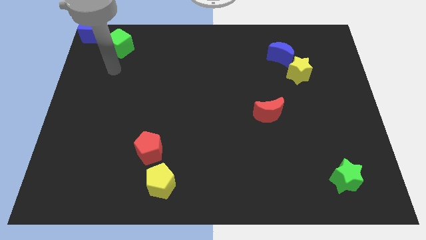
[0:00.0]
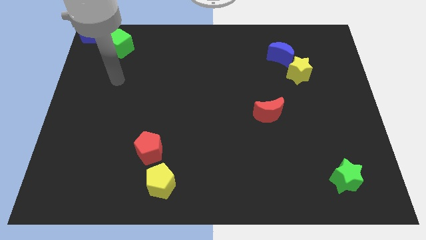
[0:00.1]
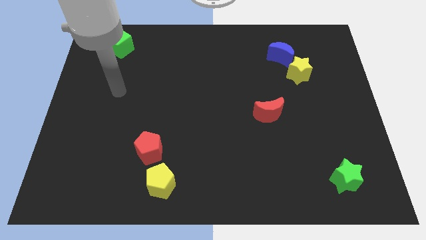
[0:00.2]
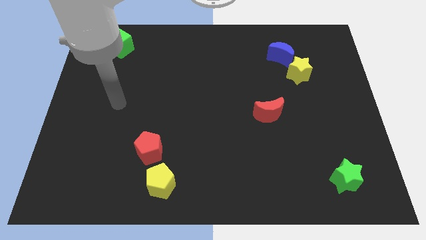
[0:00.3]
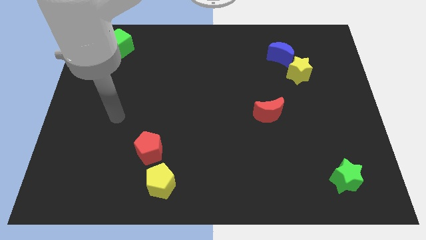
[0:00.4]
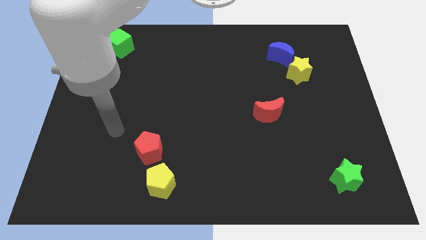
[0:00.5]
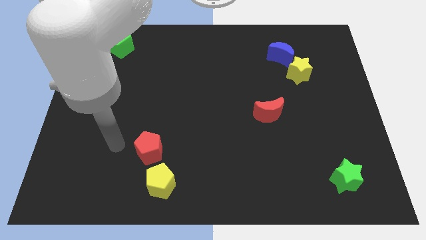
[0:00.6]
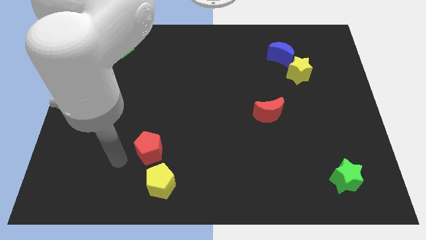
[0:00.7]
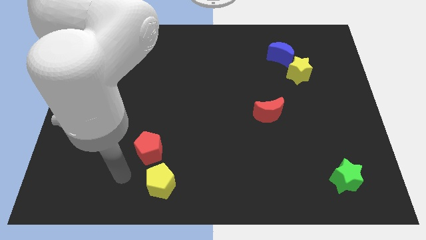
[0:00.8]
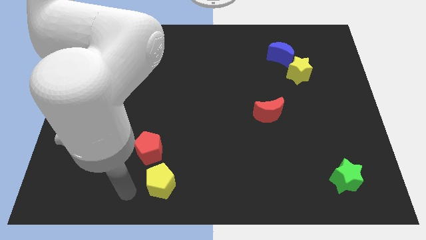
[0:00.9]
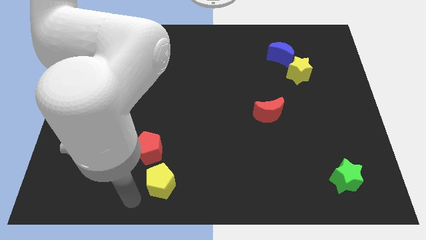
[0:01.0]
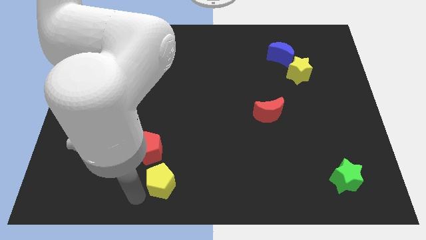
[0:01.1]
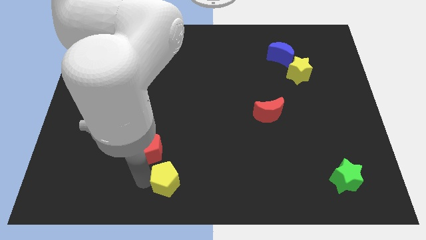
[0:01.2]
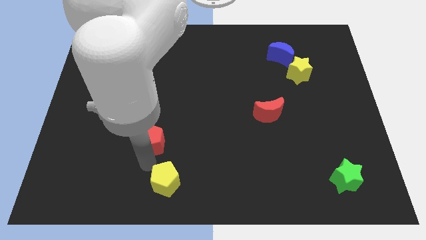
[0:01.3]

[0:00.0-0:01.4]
move the arm below the red pentagon

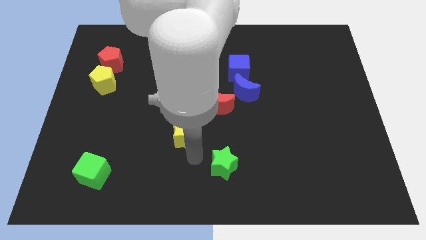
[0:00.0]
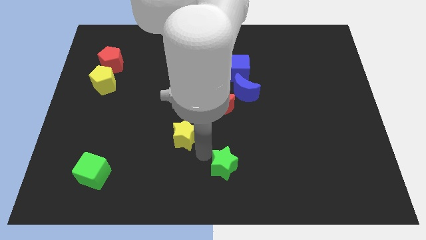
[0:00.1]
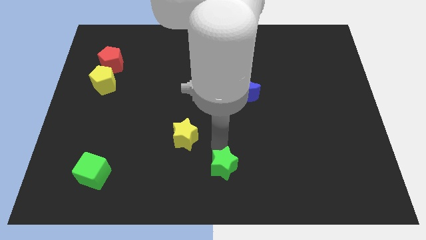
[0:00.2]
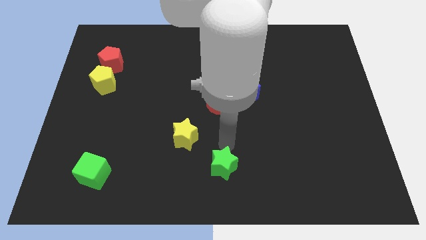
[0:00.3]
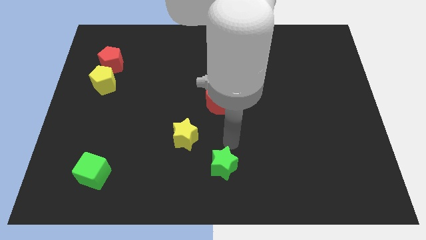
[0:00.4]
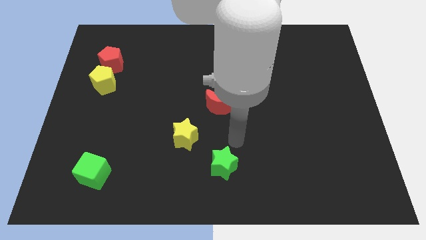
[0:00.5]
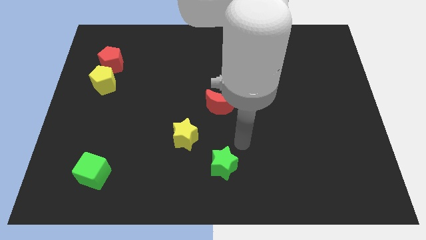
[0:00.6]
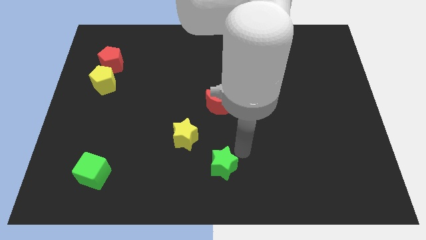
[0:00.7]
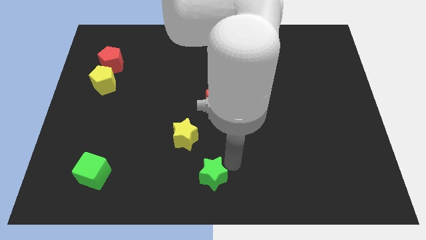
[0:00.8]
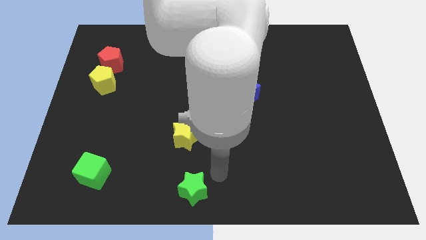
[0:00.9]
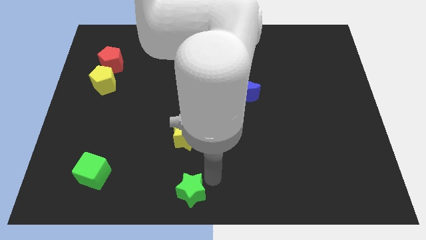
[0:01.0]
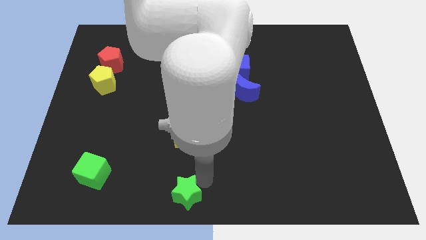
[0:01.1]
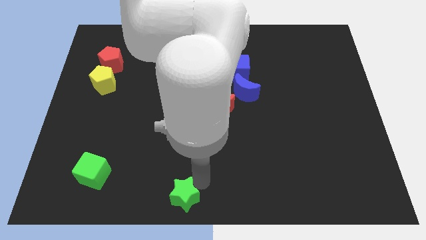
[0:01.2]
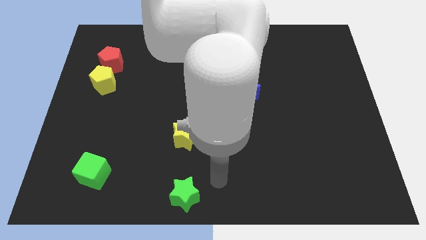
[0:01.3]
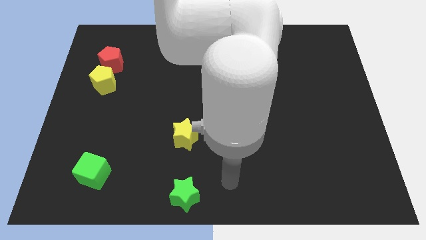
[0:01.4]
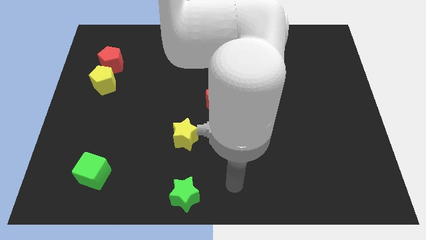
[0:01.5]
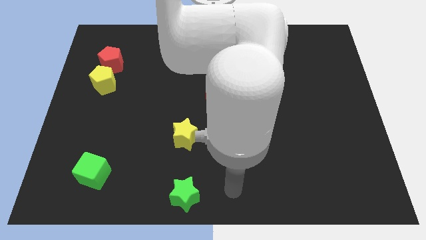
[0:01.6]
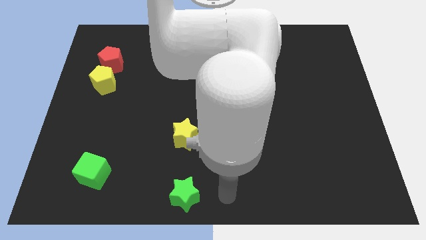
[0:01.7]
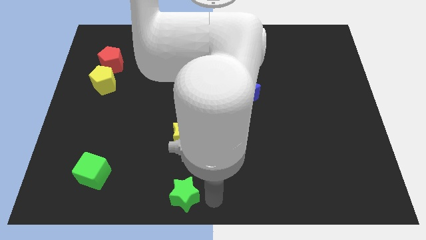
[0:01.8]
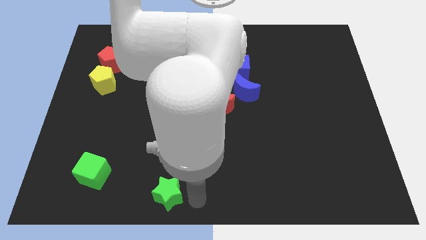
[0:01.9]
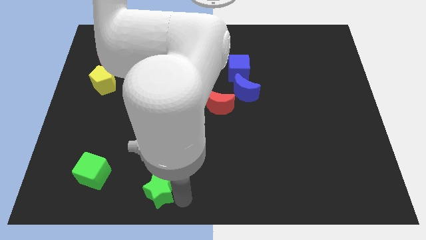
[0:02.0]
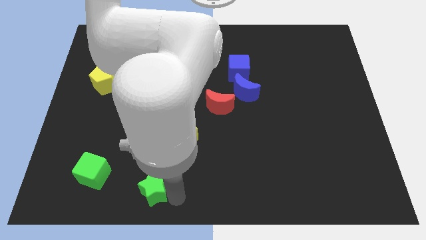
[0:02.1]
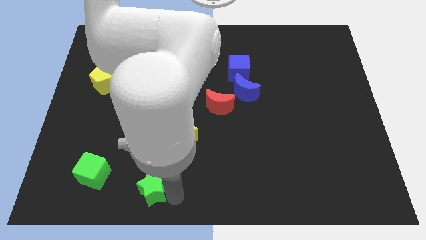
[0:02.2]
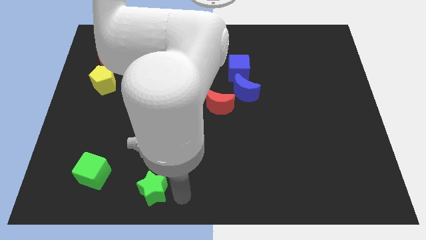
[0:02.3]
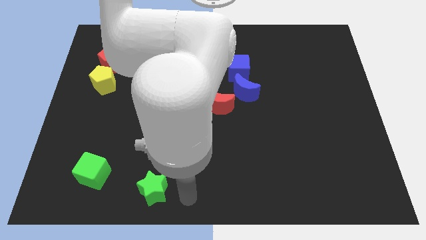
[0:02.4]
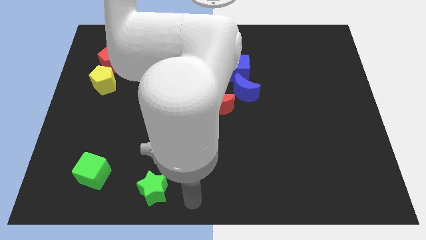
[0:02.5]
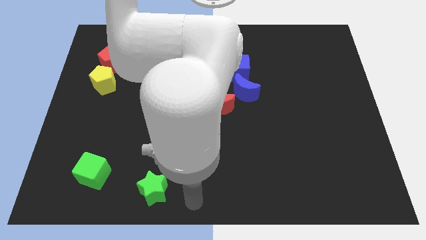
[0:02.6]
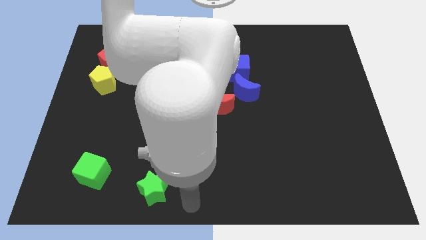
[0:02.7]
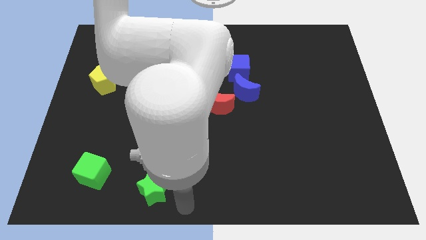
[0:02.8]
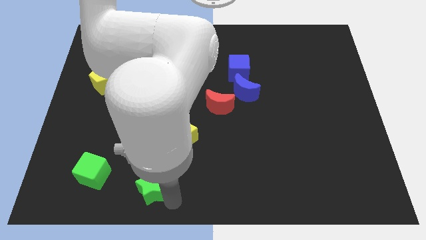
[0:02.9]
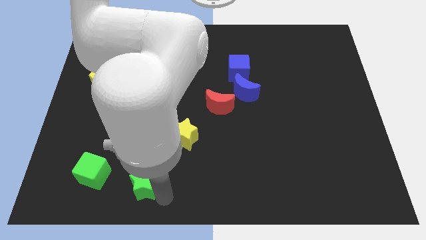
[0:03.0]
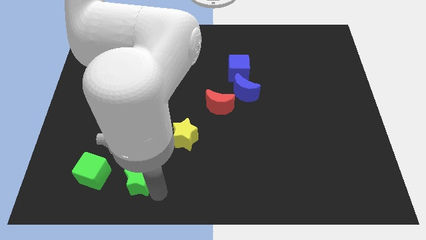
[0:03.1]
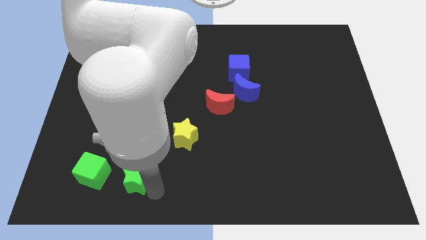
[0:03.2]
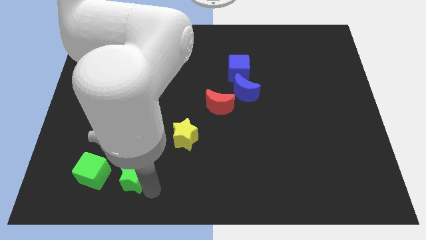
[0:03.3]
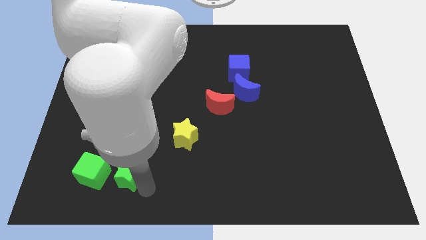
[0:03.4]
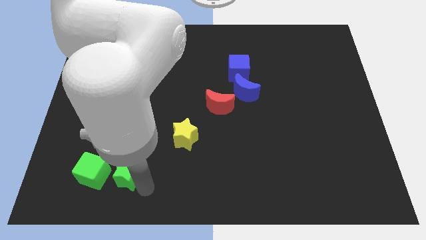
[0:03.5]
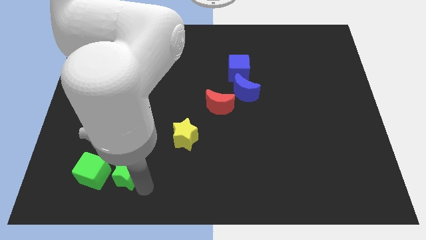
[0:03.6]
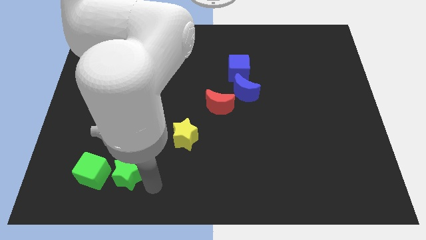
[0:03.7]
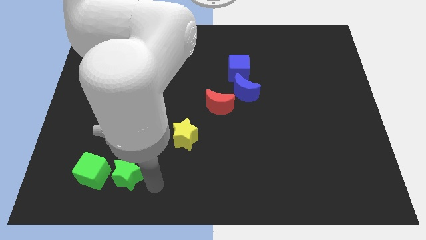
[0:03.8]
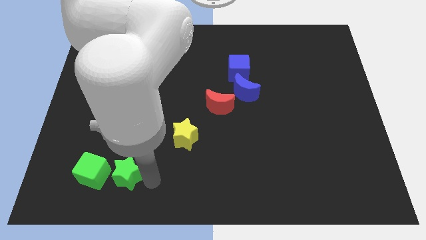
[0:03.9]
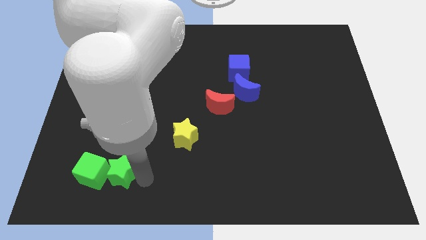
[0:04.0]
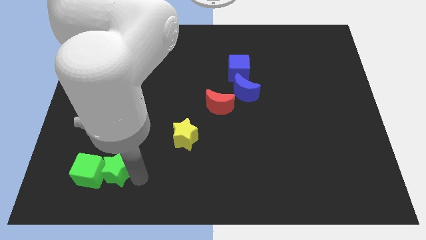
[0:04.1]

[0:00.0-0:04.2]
move green star into green cube

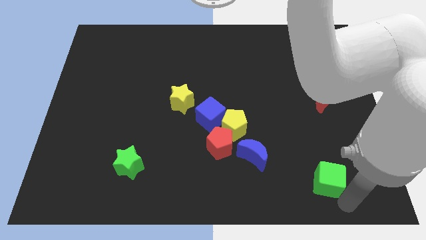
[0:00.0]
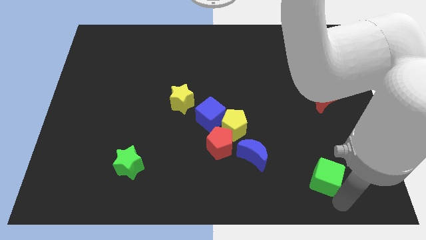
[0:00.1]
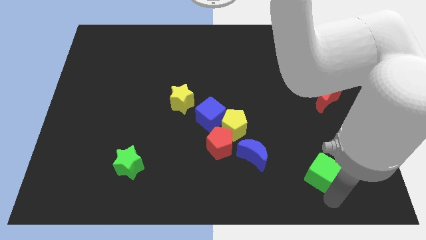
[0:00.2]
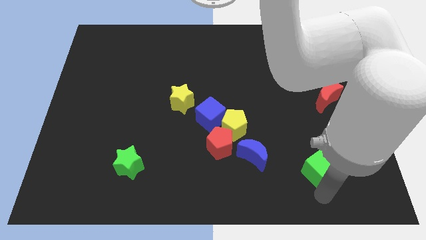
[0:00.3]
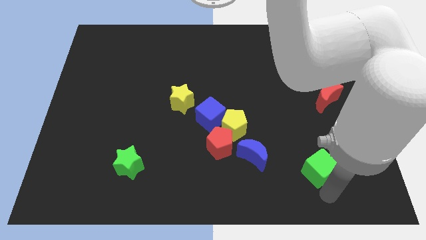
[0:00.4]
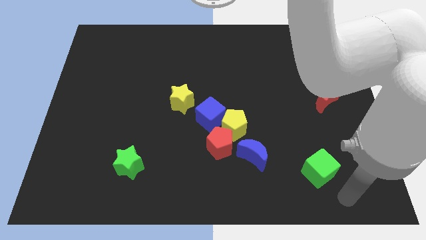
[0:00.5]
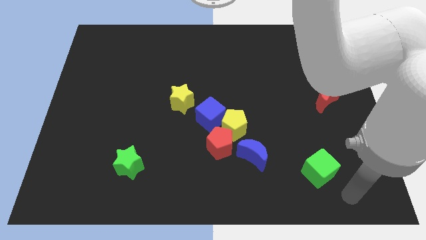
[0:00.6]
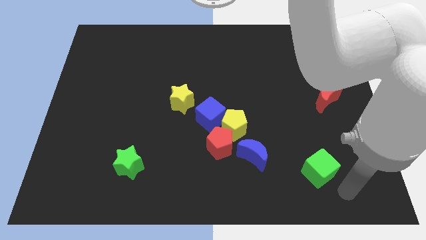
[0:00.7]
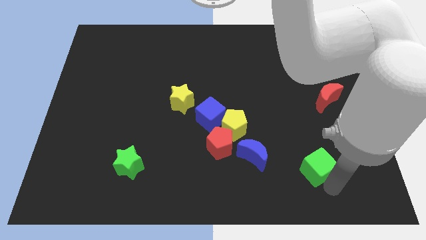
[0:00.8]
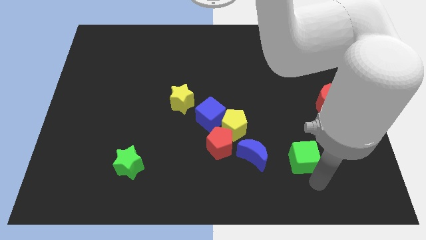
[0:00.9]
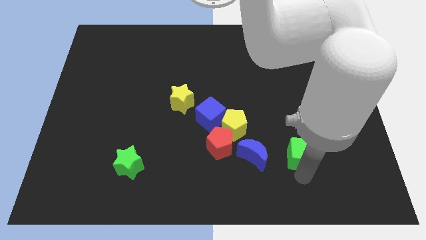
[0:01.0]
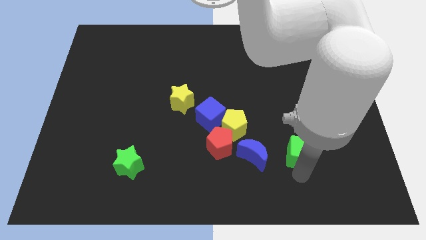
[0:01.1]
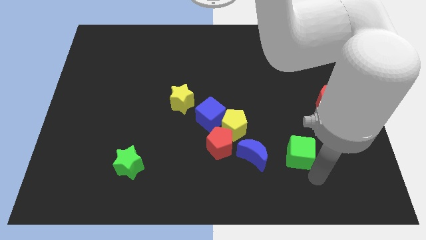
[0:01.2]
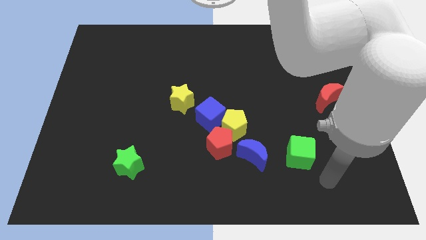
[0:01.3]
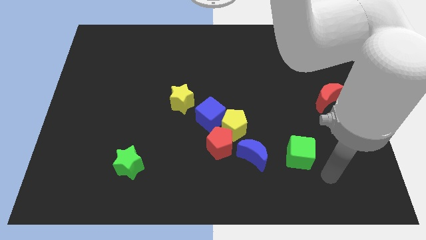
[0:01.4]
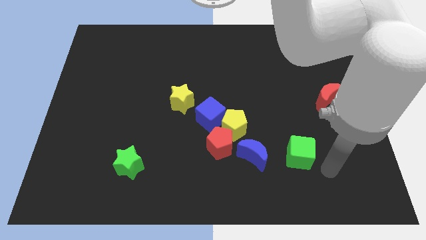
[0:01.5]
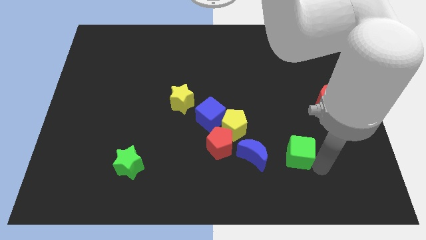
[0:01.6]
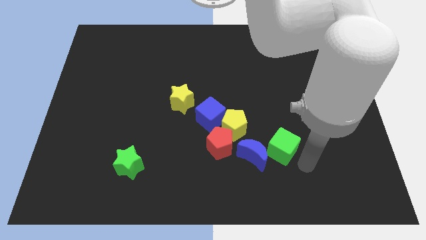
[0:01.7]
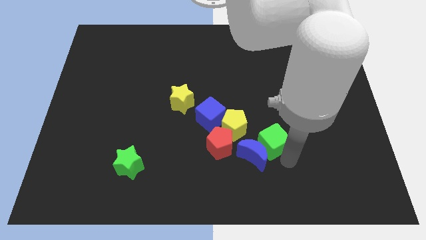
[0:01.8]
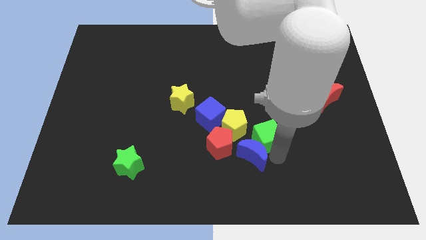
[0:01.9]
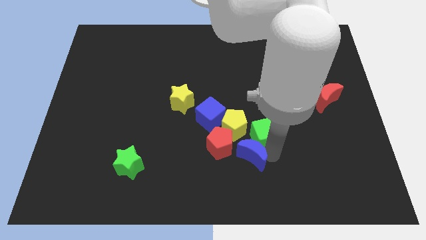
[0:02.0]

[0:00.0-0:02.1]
push the green cube to the top of the blue crescent

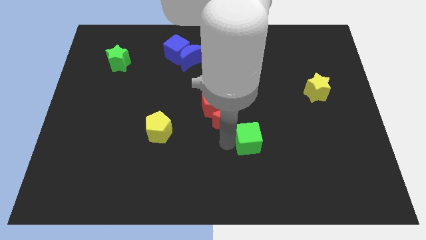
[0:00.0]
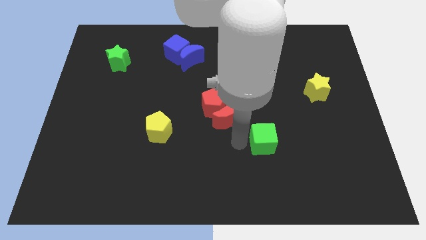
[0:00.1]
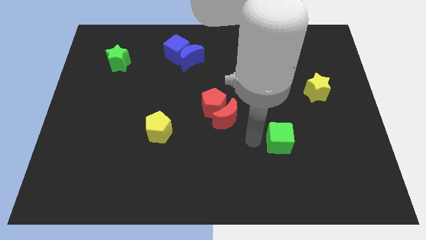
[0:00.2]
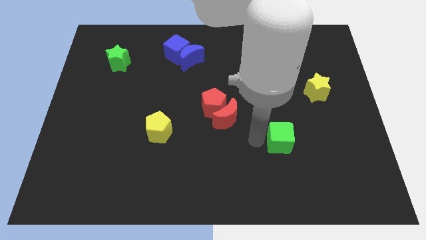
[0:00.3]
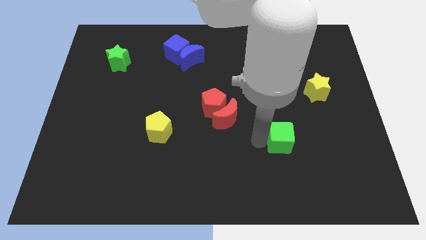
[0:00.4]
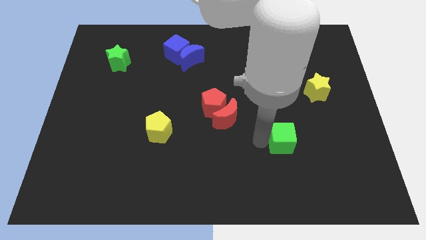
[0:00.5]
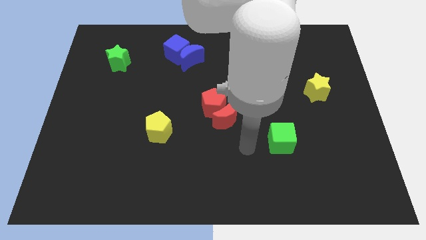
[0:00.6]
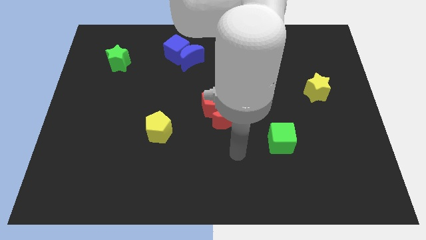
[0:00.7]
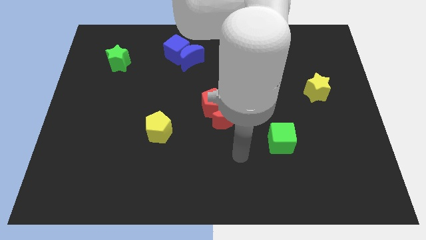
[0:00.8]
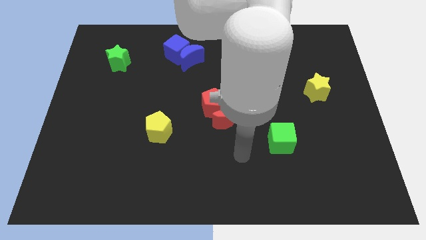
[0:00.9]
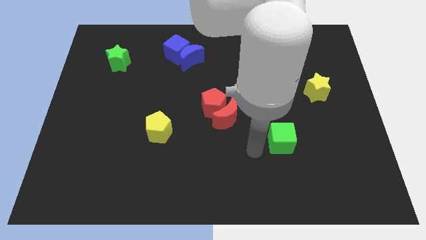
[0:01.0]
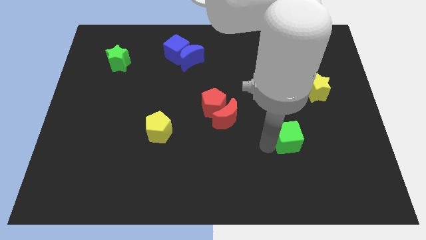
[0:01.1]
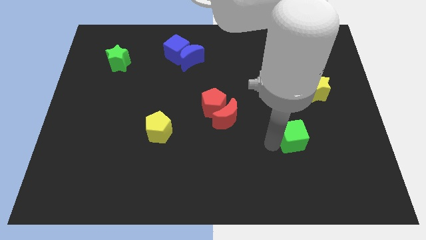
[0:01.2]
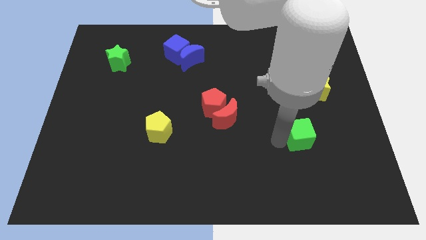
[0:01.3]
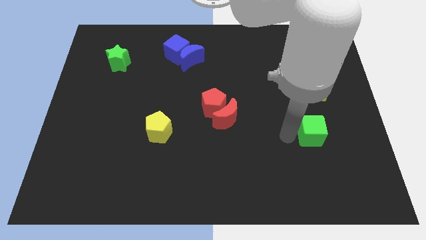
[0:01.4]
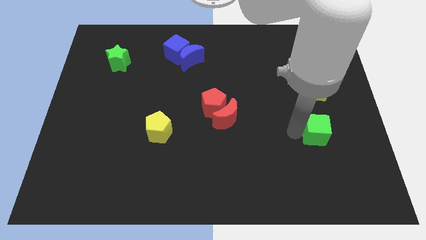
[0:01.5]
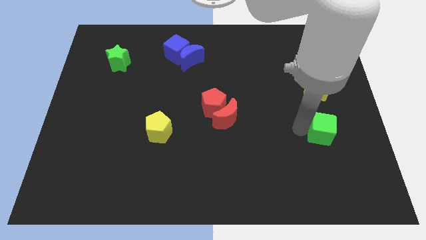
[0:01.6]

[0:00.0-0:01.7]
place the green cube vertically below the yellow star
